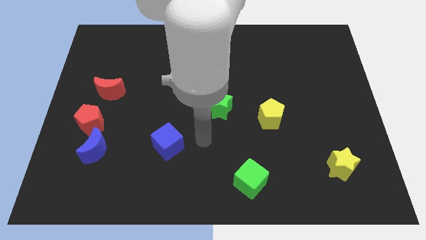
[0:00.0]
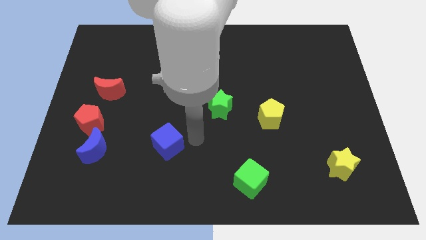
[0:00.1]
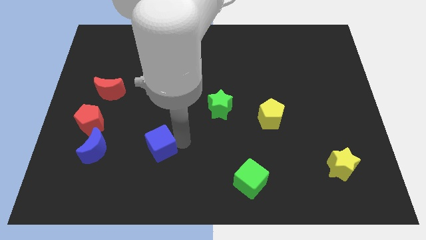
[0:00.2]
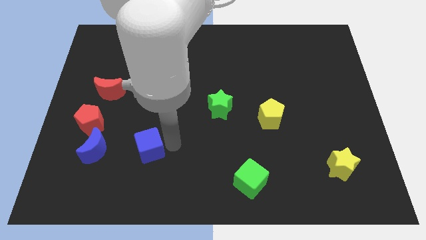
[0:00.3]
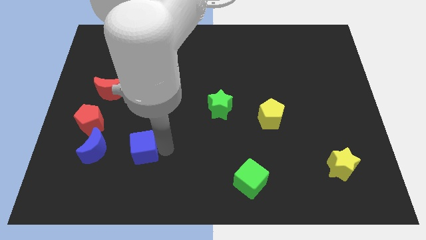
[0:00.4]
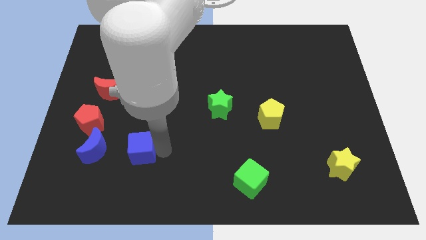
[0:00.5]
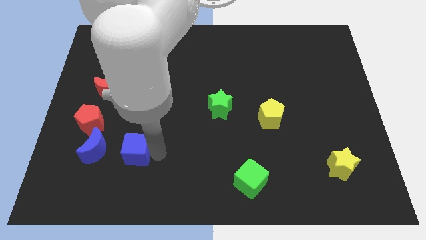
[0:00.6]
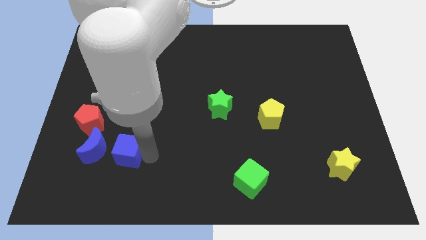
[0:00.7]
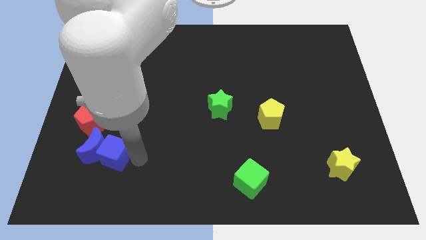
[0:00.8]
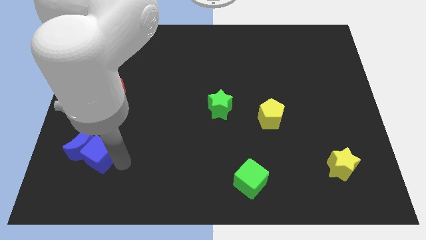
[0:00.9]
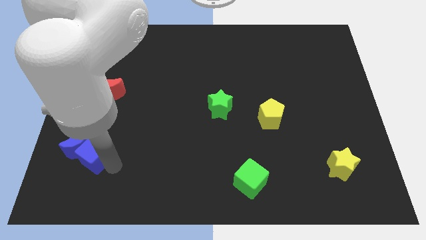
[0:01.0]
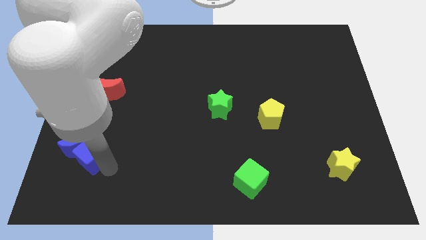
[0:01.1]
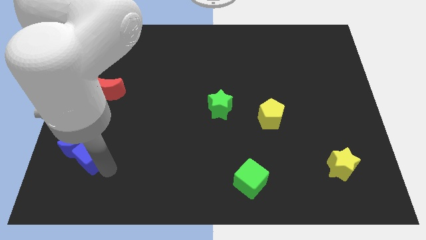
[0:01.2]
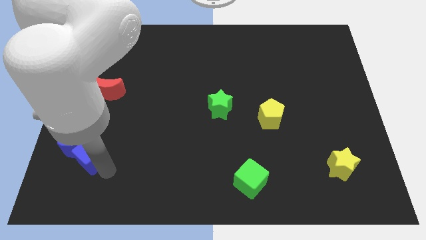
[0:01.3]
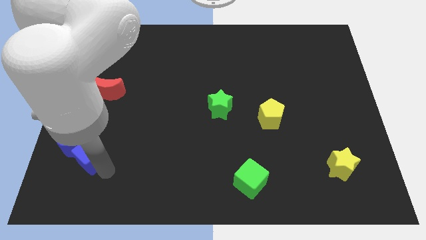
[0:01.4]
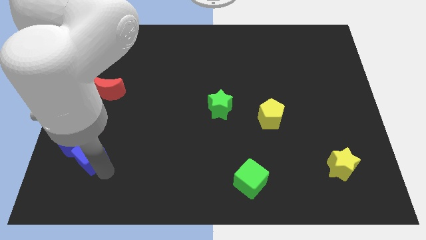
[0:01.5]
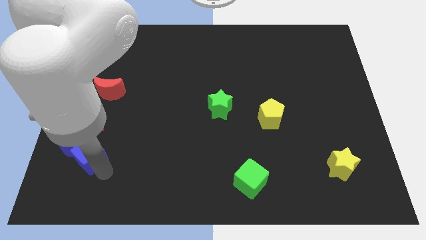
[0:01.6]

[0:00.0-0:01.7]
push the blue cube into the blue crescent

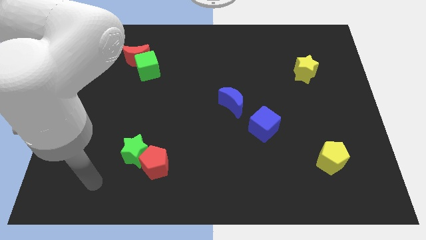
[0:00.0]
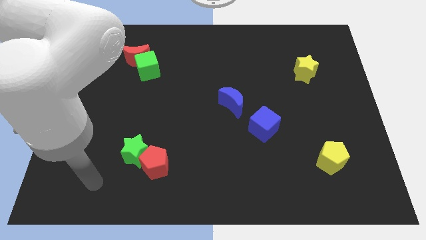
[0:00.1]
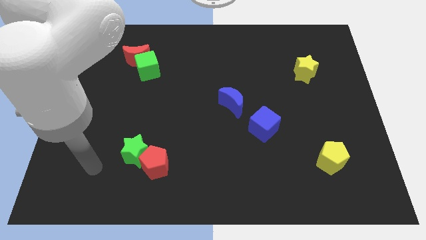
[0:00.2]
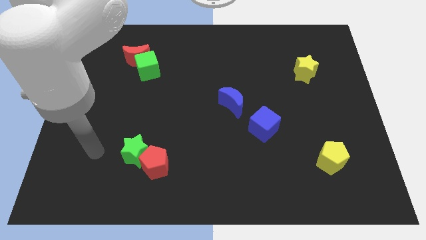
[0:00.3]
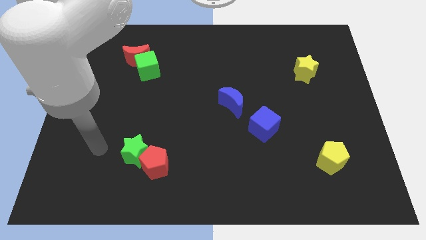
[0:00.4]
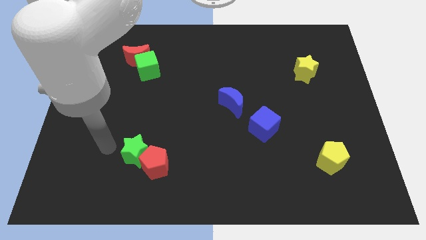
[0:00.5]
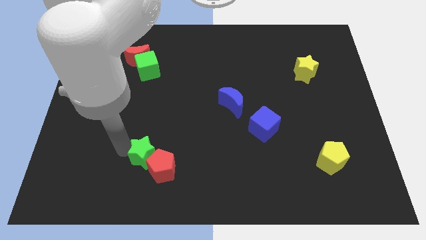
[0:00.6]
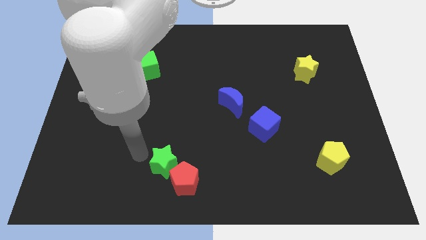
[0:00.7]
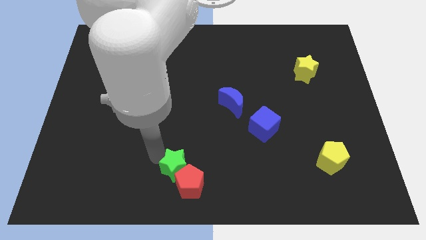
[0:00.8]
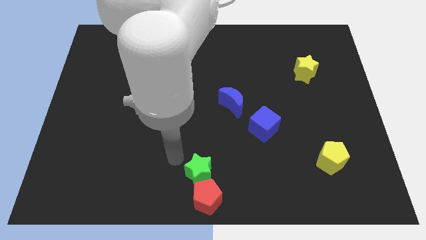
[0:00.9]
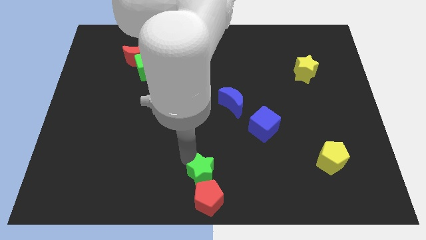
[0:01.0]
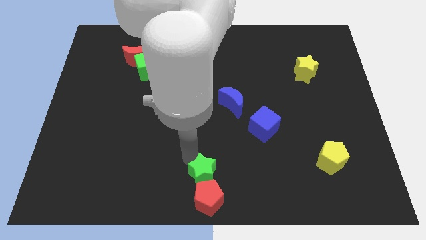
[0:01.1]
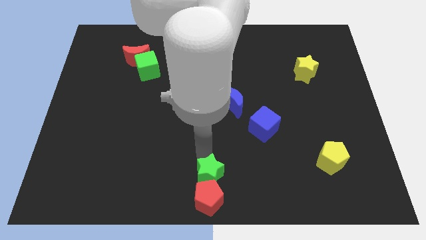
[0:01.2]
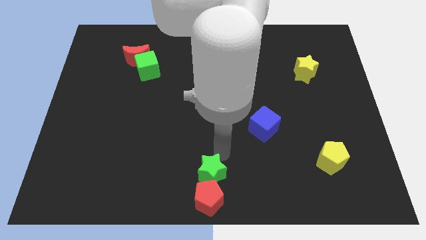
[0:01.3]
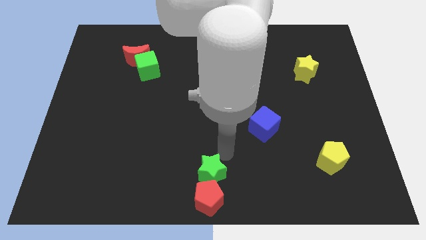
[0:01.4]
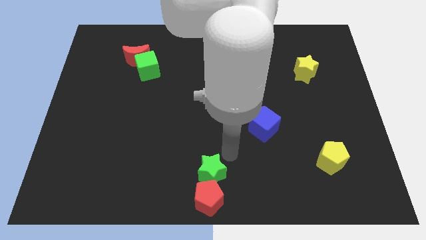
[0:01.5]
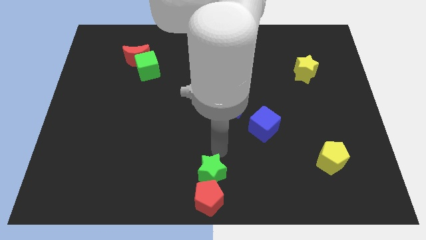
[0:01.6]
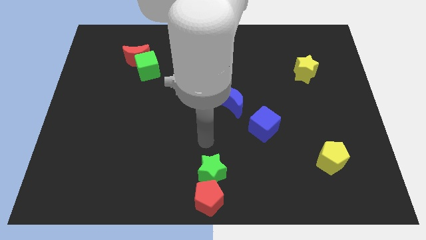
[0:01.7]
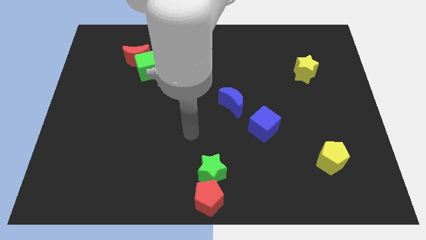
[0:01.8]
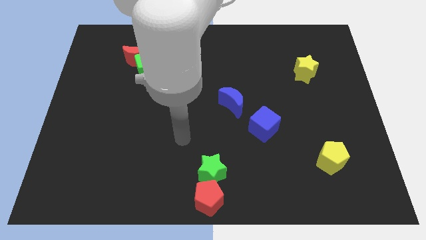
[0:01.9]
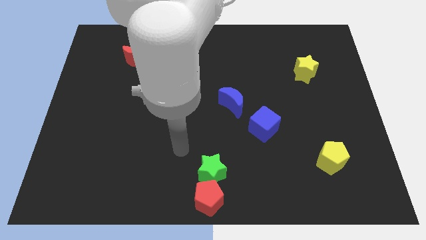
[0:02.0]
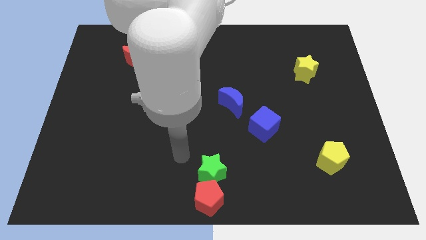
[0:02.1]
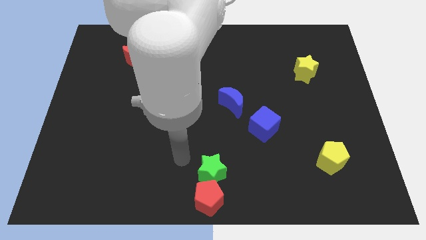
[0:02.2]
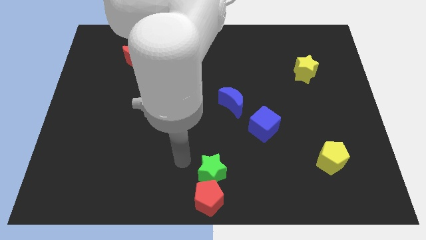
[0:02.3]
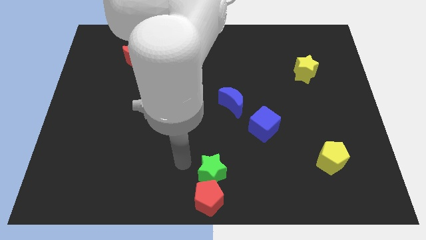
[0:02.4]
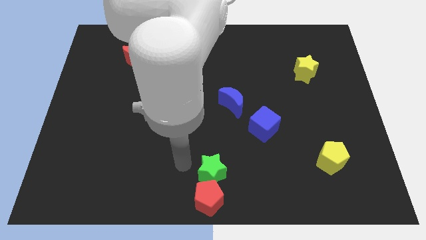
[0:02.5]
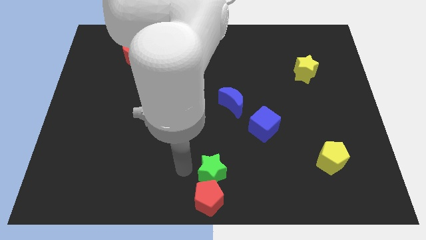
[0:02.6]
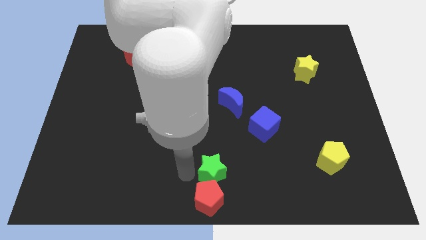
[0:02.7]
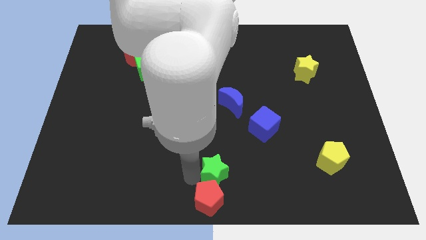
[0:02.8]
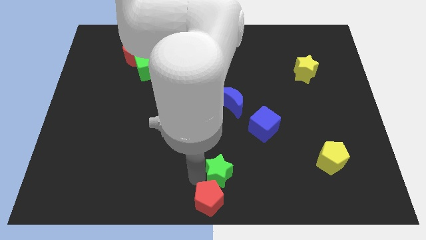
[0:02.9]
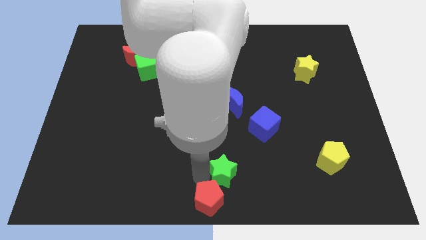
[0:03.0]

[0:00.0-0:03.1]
push green star along with red pentagon to the bottom center

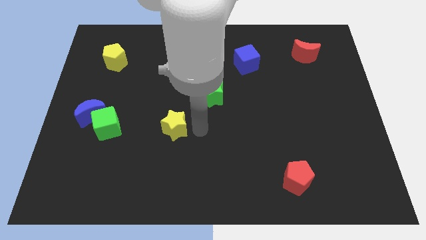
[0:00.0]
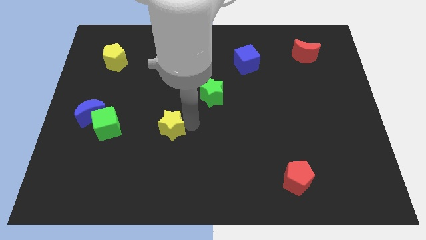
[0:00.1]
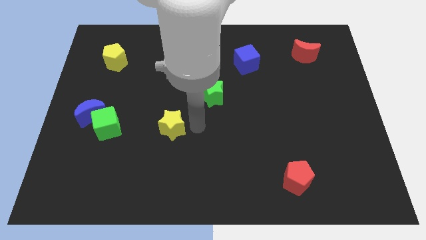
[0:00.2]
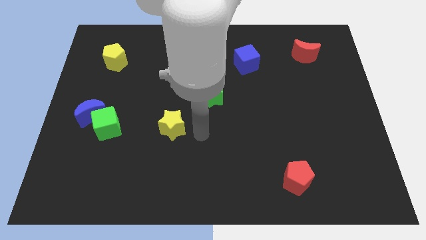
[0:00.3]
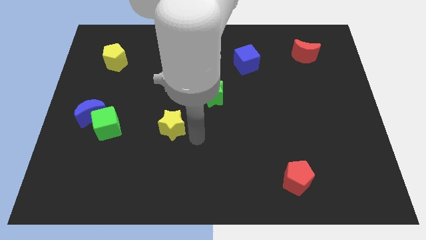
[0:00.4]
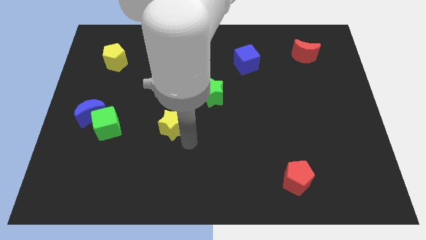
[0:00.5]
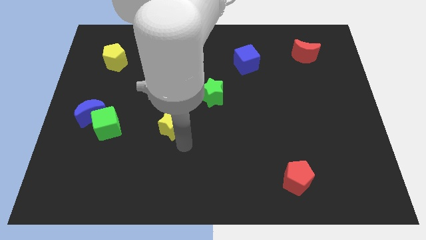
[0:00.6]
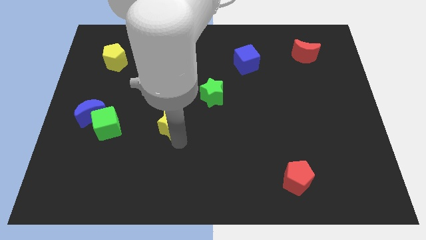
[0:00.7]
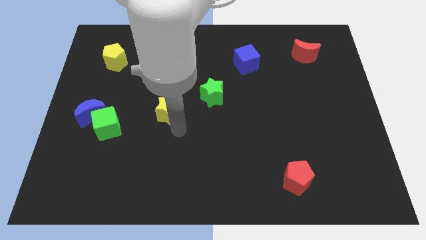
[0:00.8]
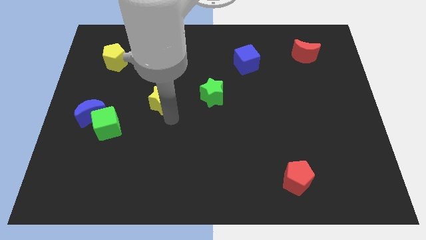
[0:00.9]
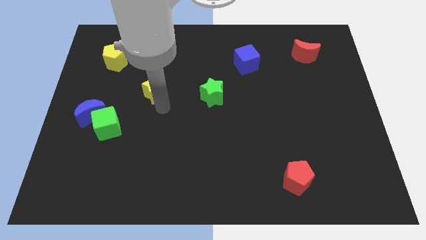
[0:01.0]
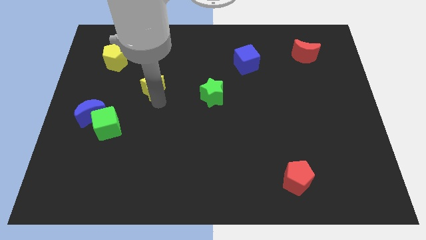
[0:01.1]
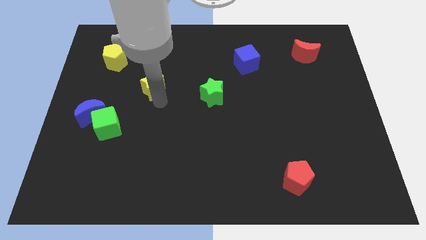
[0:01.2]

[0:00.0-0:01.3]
move yellow star to the top right of the green cube

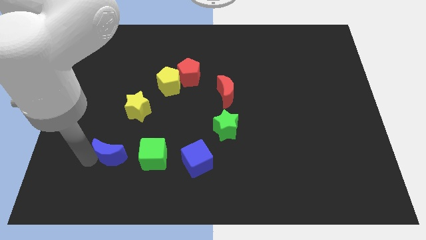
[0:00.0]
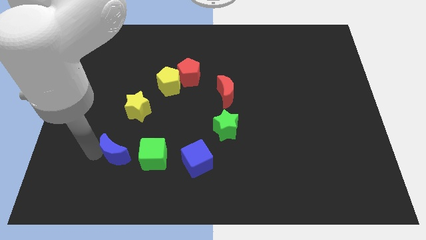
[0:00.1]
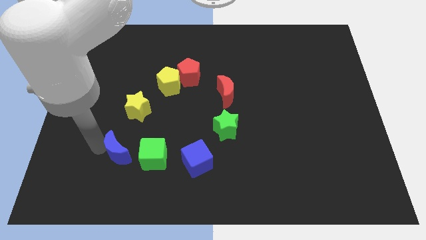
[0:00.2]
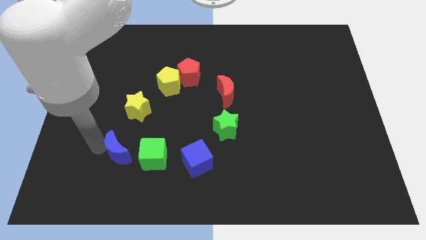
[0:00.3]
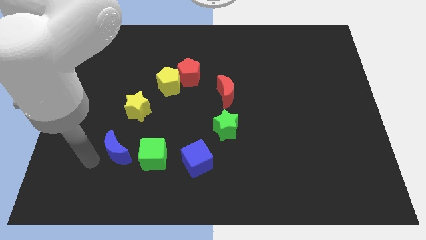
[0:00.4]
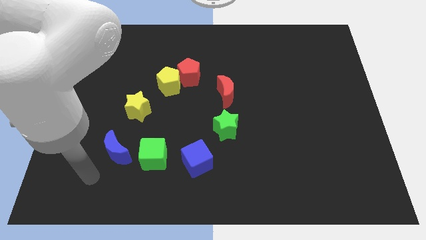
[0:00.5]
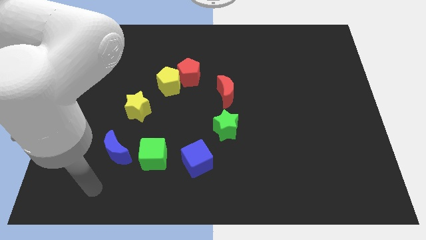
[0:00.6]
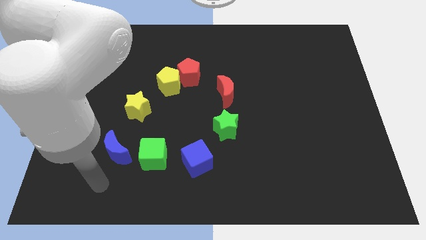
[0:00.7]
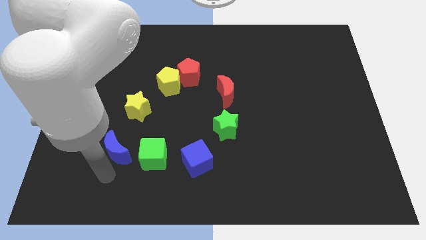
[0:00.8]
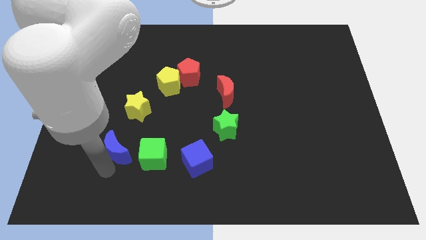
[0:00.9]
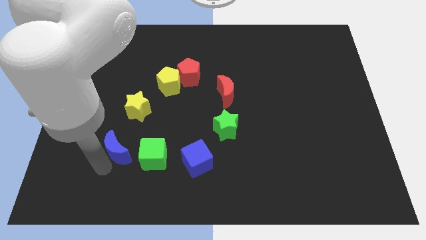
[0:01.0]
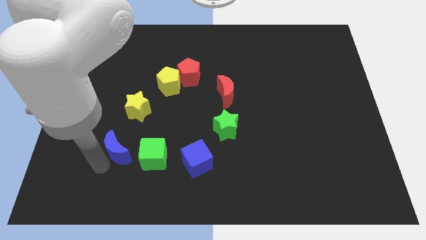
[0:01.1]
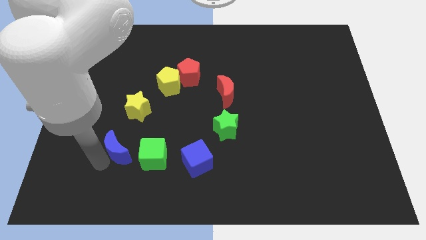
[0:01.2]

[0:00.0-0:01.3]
move the blue crescent parallel to the yellow star

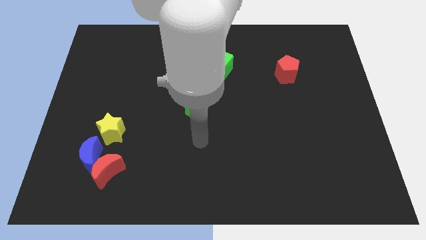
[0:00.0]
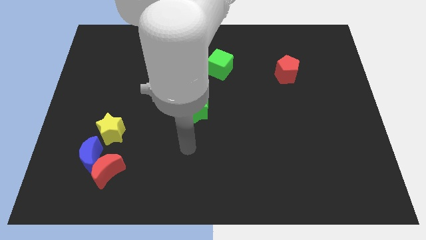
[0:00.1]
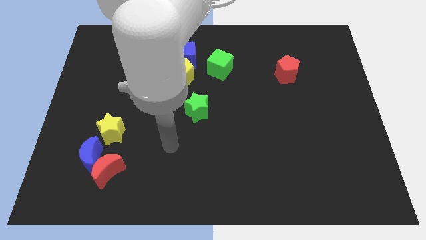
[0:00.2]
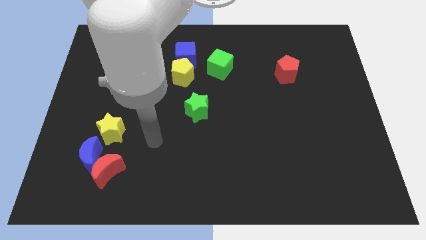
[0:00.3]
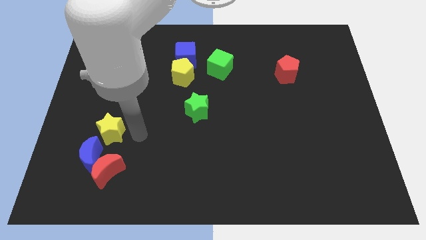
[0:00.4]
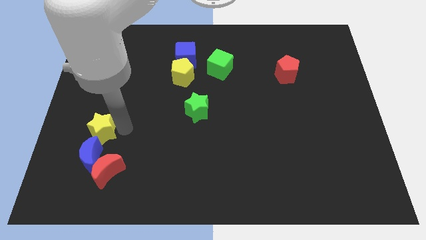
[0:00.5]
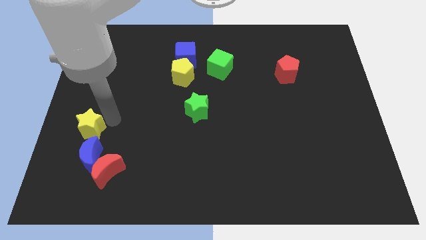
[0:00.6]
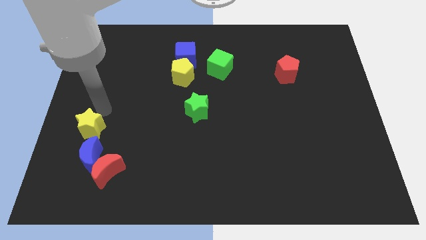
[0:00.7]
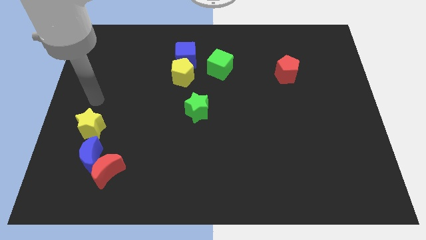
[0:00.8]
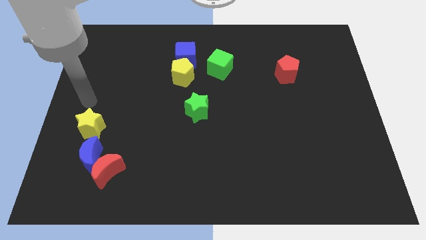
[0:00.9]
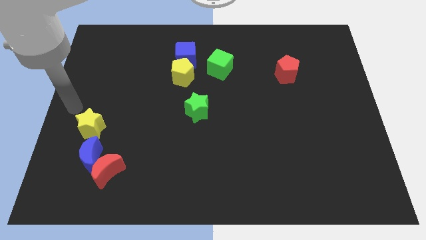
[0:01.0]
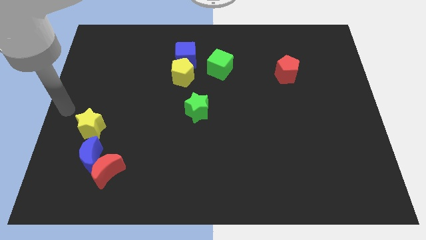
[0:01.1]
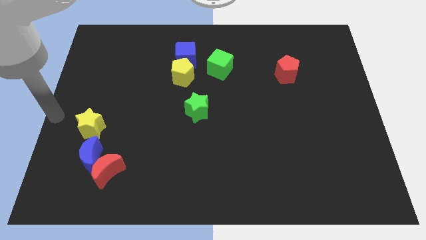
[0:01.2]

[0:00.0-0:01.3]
push the yellow star slightly to the left side of the board

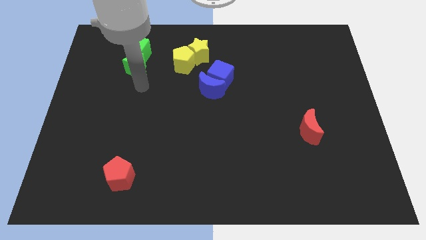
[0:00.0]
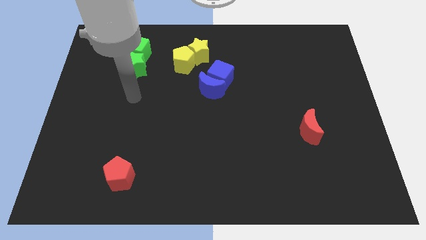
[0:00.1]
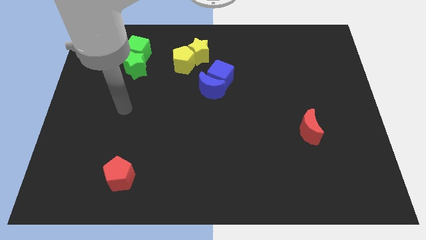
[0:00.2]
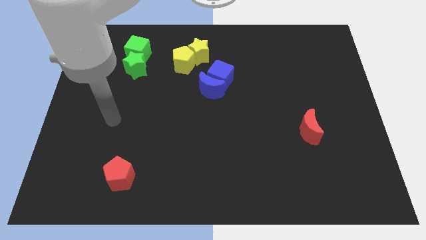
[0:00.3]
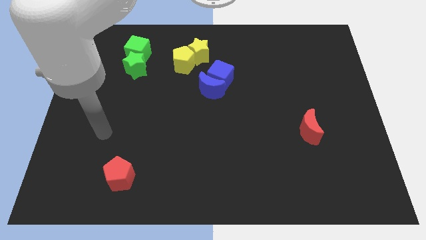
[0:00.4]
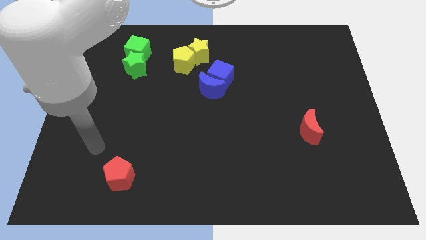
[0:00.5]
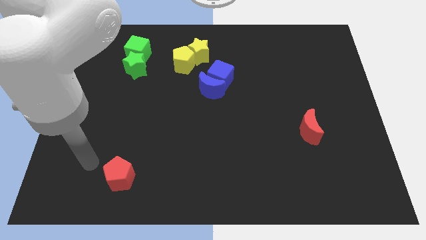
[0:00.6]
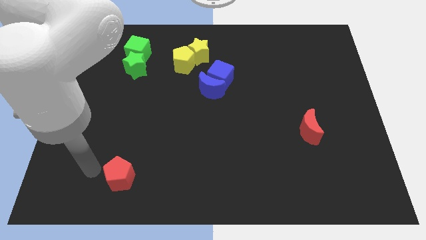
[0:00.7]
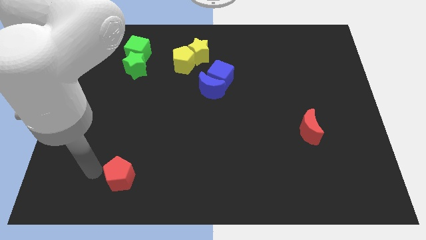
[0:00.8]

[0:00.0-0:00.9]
move the arm away from the green star
